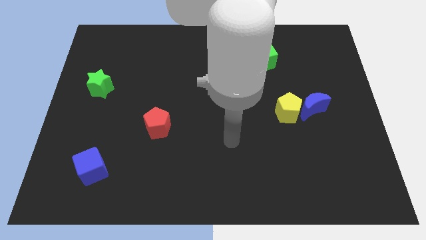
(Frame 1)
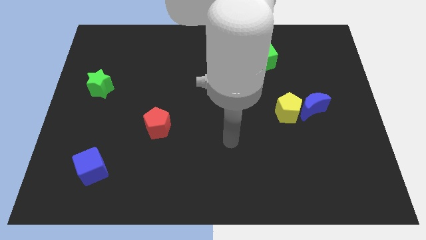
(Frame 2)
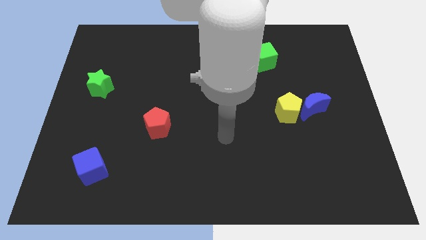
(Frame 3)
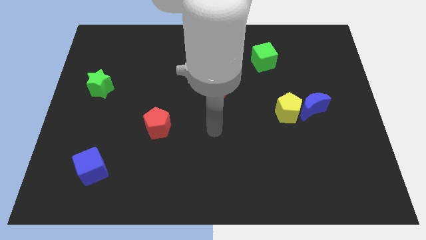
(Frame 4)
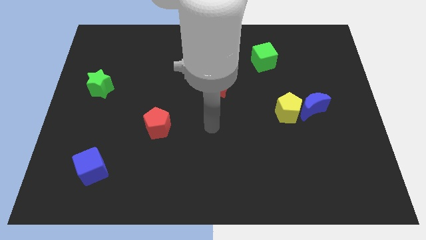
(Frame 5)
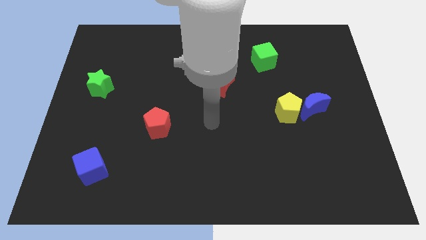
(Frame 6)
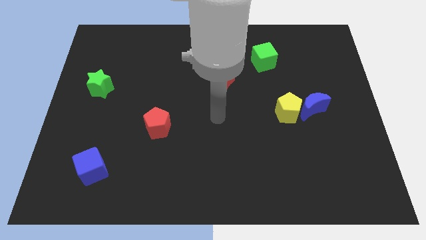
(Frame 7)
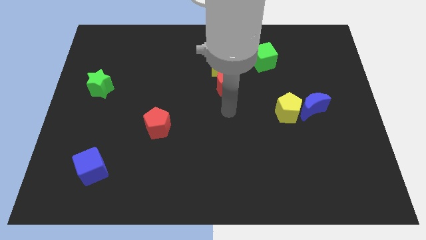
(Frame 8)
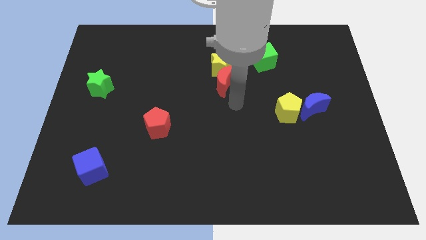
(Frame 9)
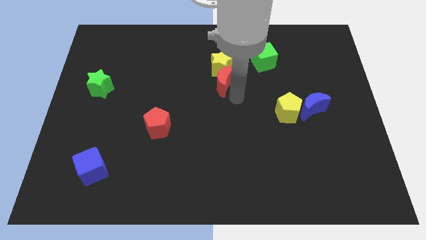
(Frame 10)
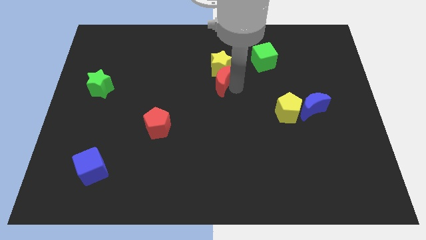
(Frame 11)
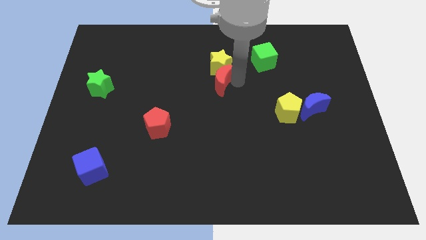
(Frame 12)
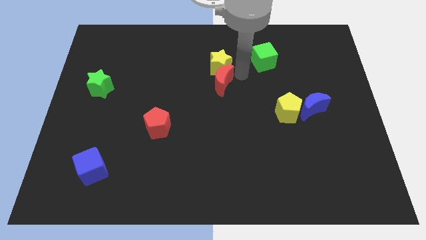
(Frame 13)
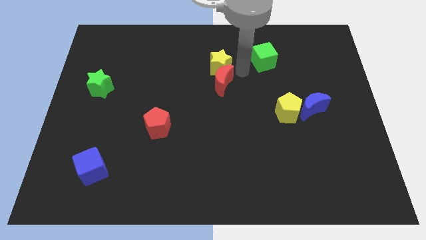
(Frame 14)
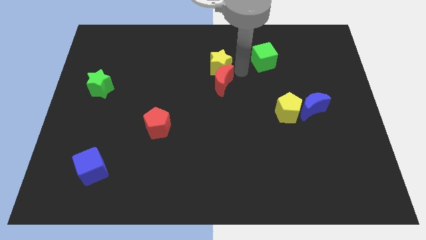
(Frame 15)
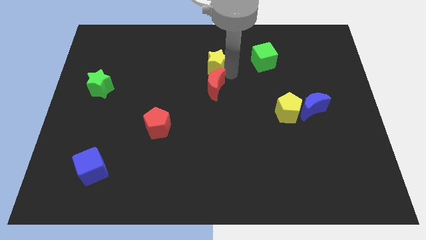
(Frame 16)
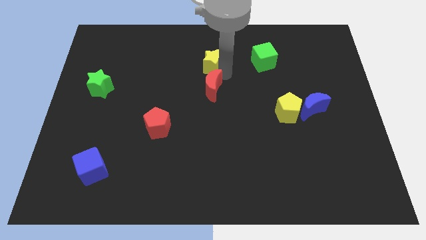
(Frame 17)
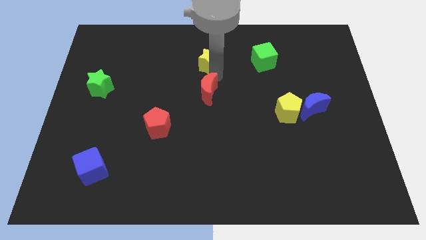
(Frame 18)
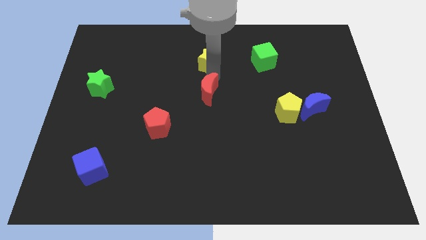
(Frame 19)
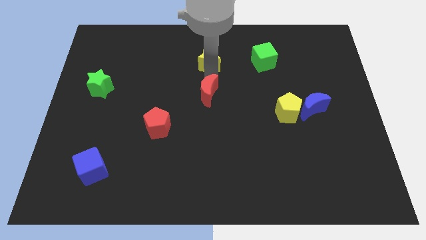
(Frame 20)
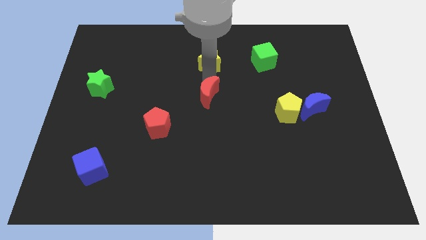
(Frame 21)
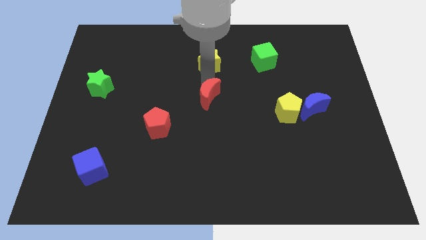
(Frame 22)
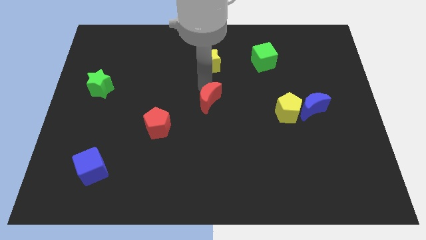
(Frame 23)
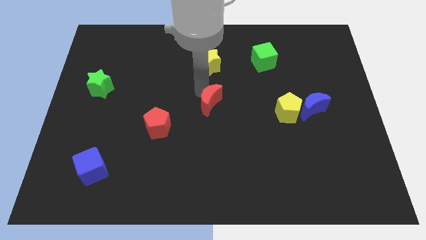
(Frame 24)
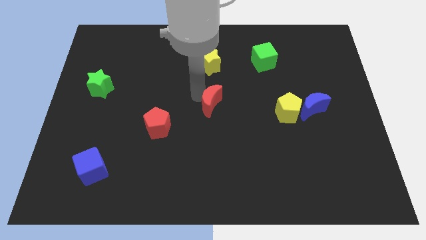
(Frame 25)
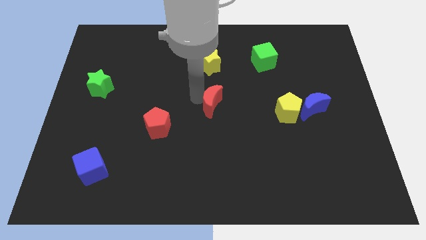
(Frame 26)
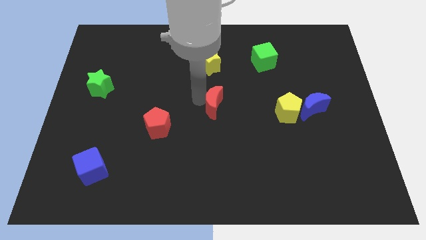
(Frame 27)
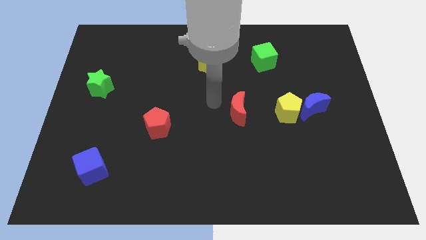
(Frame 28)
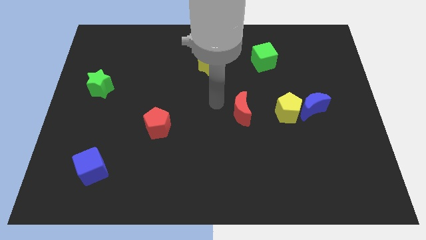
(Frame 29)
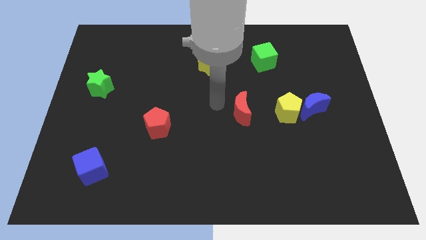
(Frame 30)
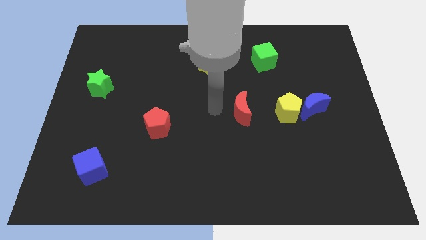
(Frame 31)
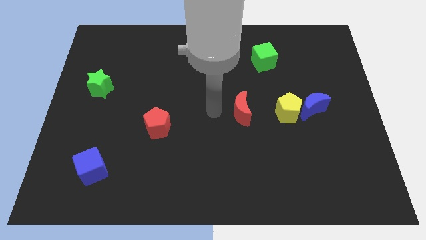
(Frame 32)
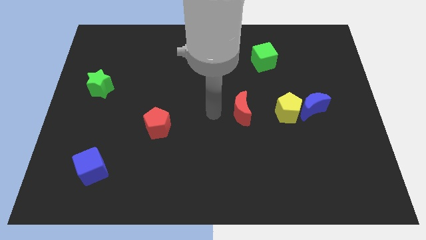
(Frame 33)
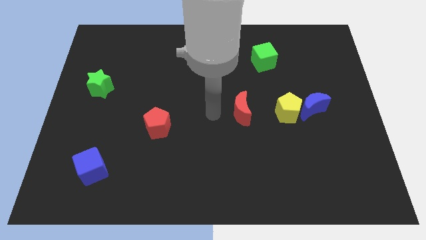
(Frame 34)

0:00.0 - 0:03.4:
move the red crescent away from the yellow star

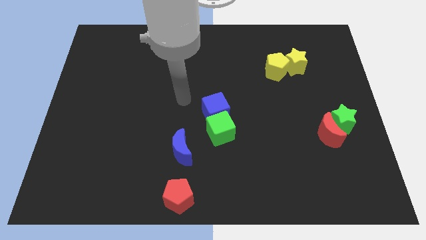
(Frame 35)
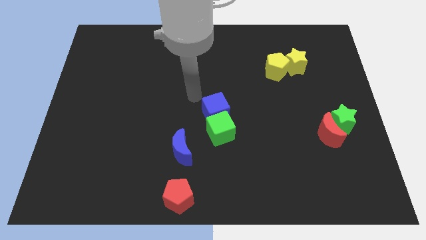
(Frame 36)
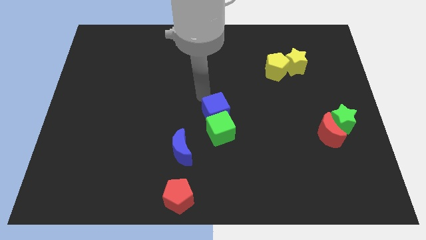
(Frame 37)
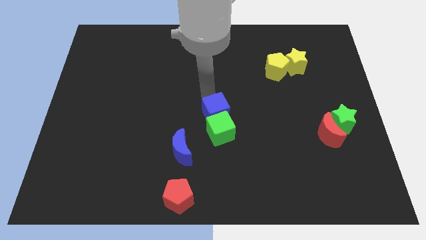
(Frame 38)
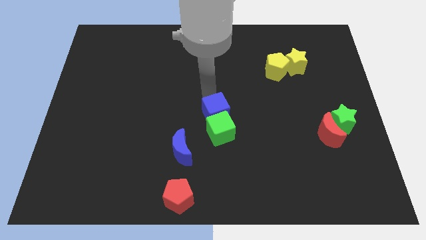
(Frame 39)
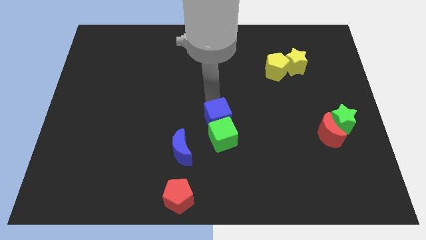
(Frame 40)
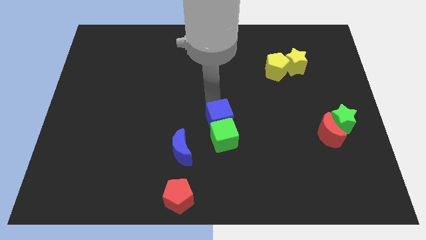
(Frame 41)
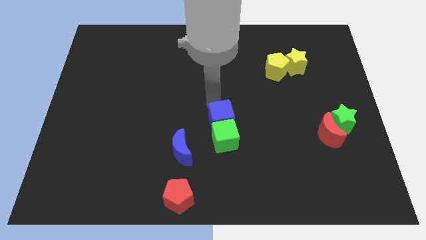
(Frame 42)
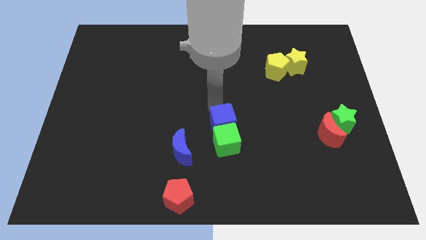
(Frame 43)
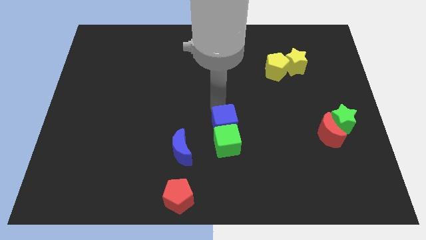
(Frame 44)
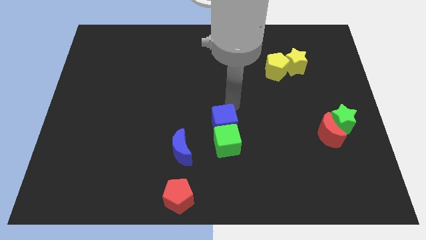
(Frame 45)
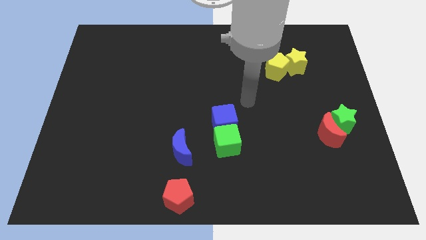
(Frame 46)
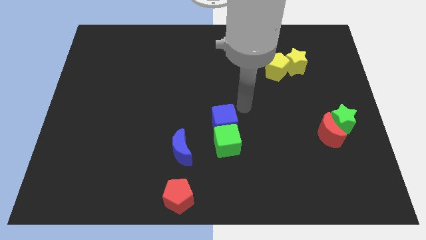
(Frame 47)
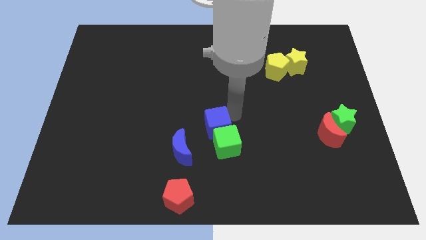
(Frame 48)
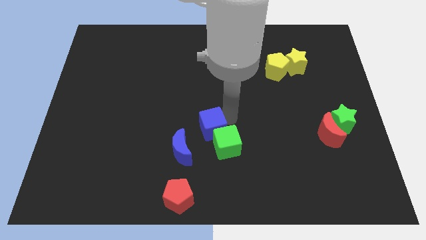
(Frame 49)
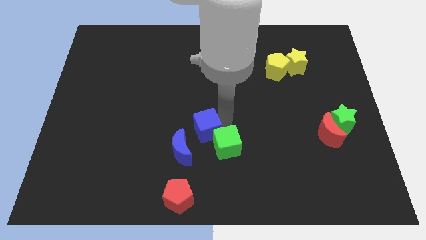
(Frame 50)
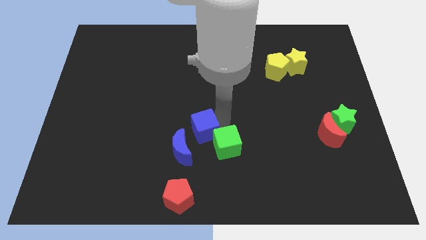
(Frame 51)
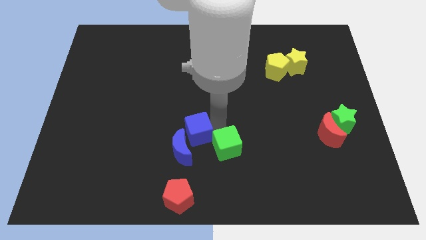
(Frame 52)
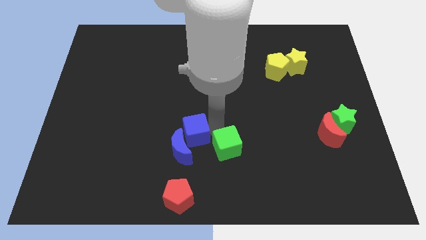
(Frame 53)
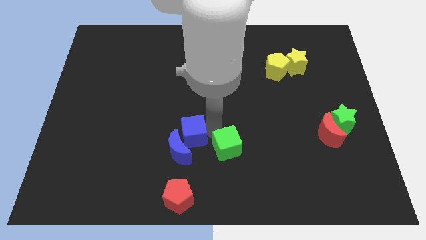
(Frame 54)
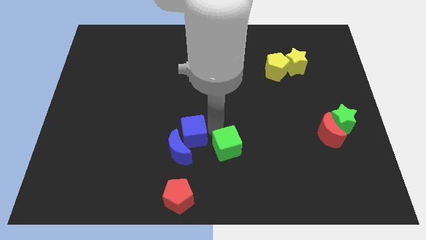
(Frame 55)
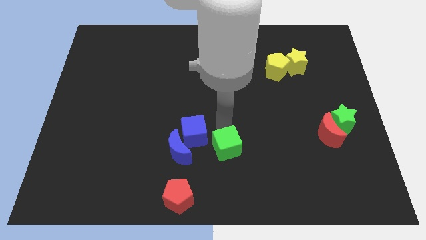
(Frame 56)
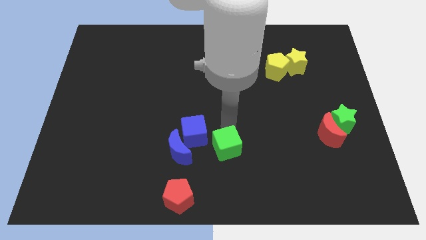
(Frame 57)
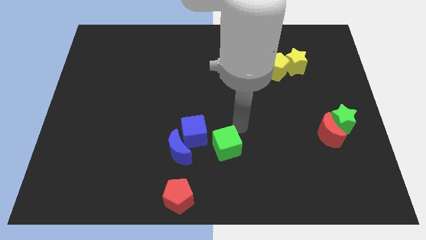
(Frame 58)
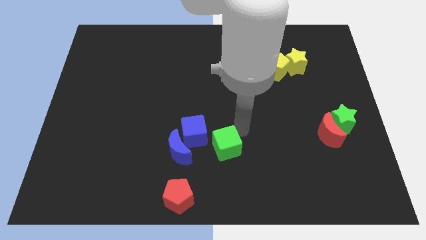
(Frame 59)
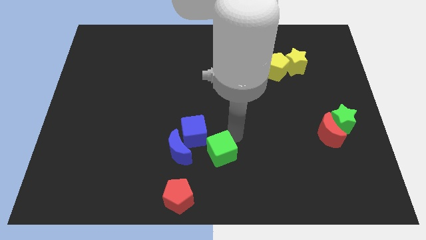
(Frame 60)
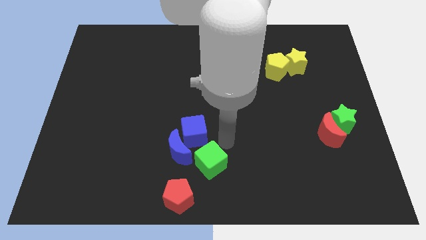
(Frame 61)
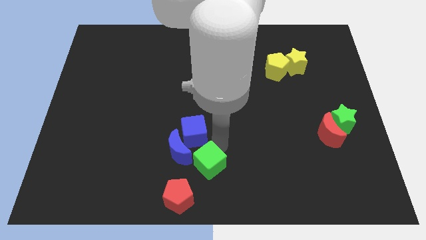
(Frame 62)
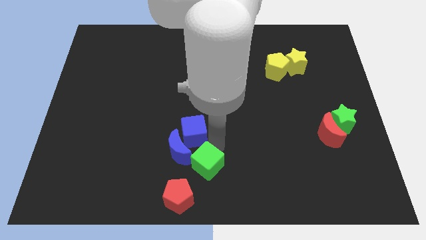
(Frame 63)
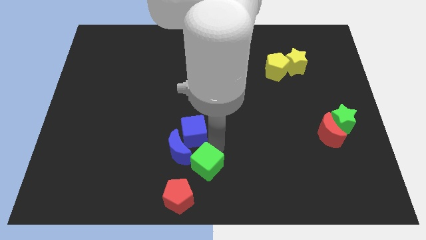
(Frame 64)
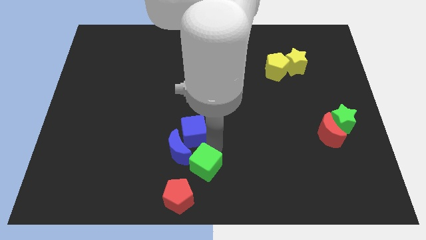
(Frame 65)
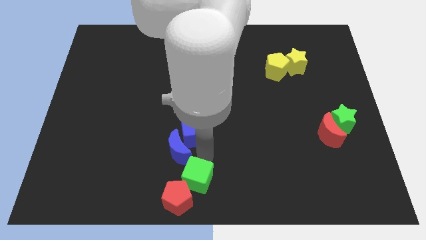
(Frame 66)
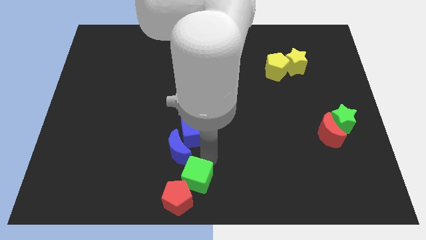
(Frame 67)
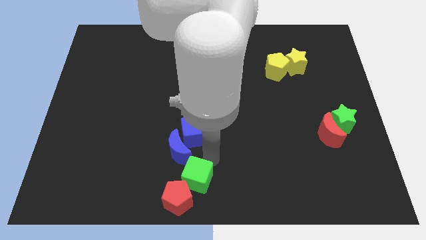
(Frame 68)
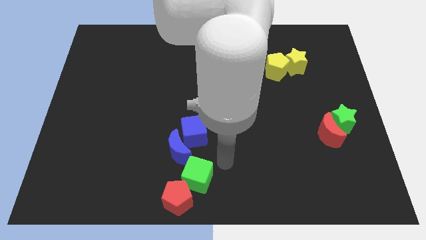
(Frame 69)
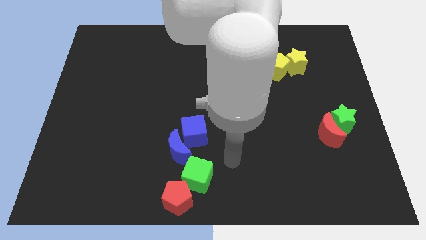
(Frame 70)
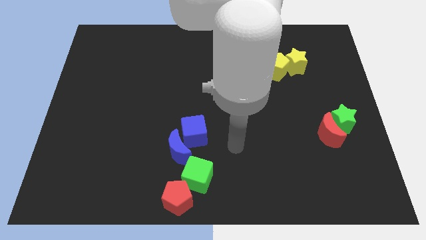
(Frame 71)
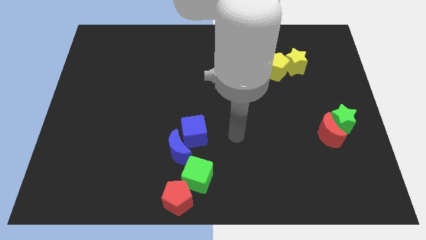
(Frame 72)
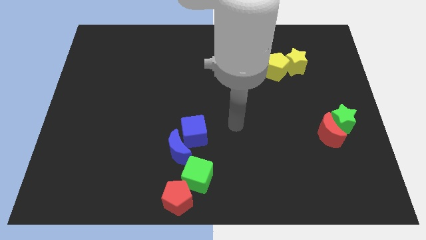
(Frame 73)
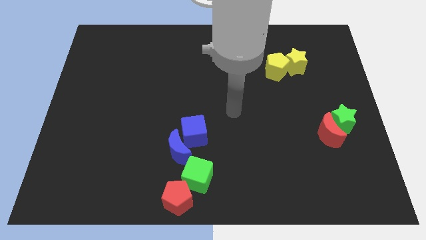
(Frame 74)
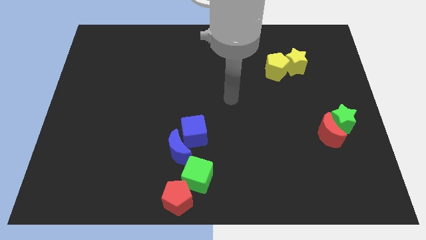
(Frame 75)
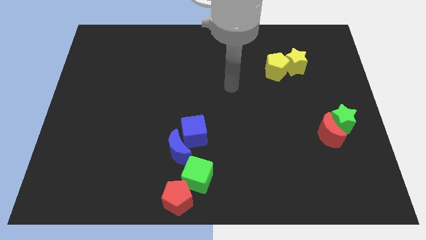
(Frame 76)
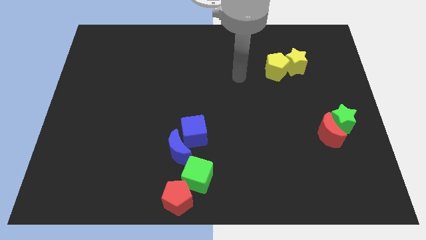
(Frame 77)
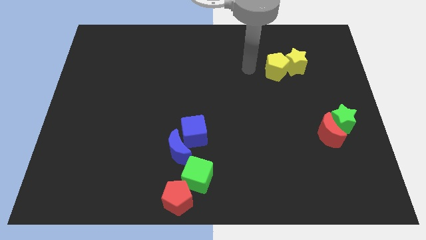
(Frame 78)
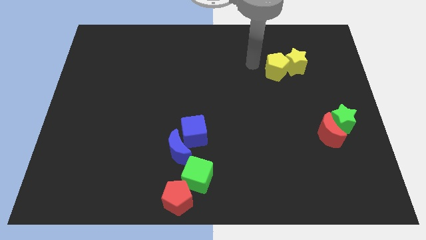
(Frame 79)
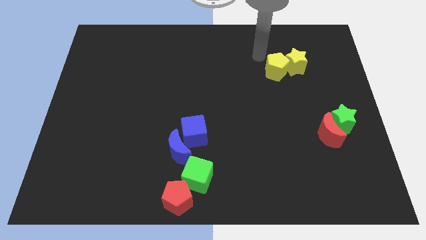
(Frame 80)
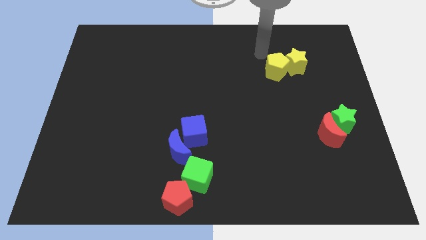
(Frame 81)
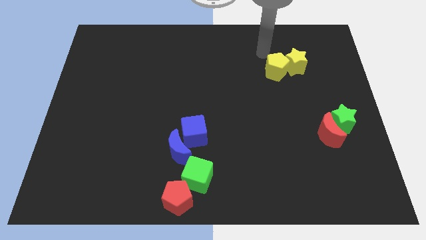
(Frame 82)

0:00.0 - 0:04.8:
move the green cube vertically below the blue moon

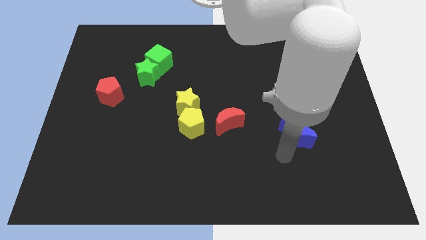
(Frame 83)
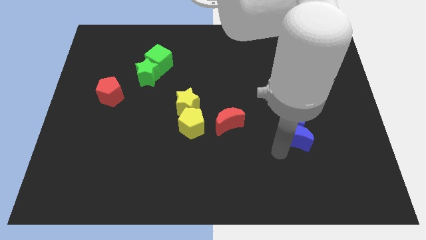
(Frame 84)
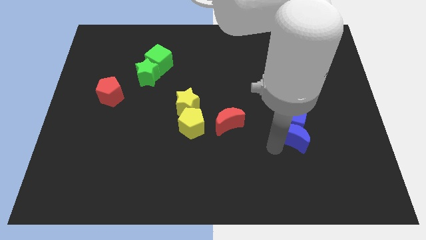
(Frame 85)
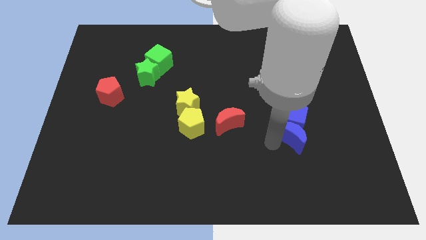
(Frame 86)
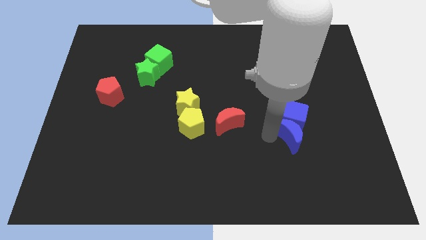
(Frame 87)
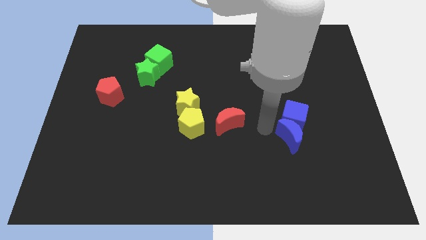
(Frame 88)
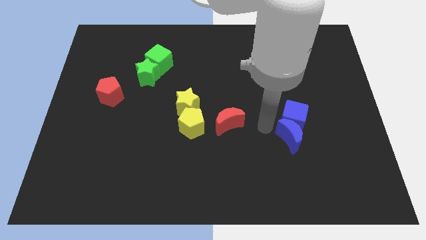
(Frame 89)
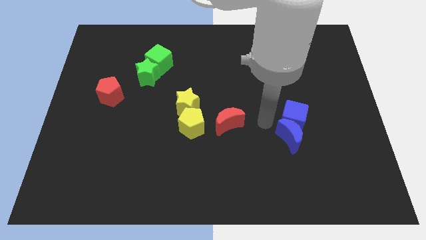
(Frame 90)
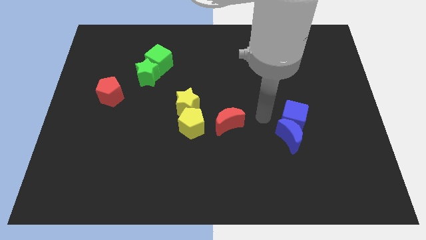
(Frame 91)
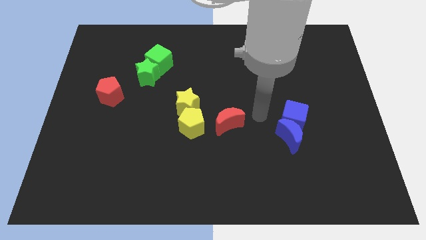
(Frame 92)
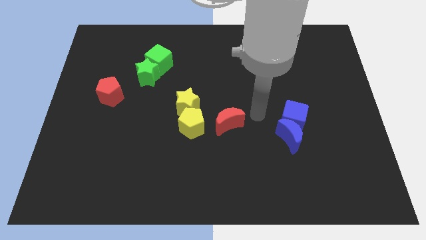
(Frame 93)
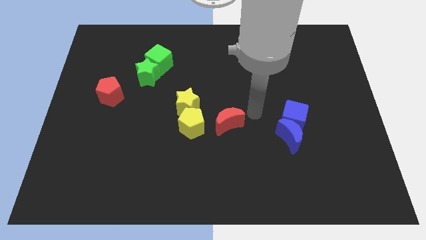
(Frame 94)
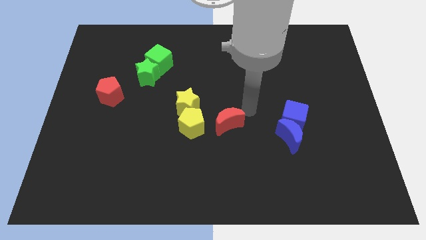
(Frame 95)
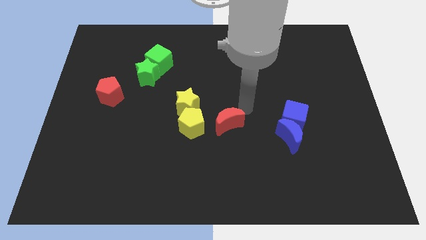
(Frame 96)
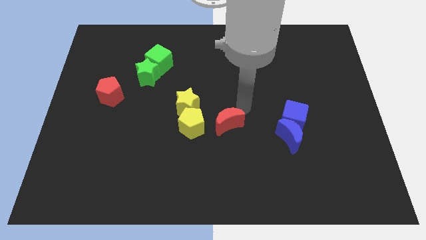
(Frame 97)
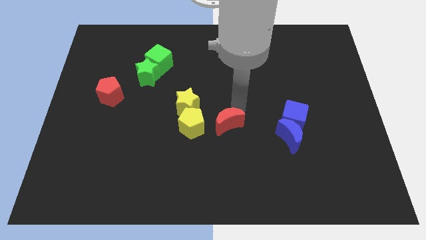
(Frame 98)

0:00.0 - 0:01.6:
move your arm to the top of the red crescent
